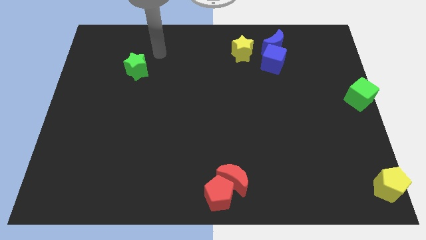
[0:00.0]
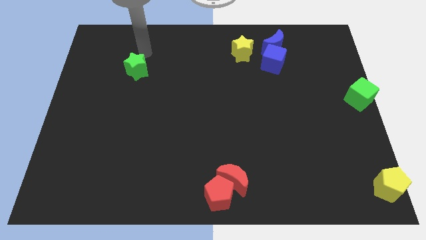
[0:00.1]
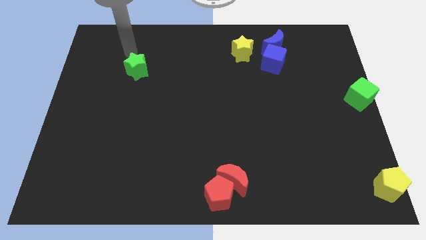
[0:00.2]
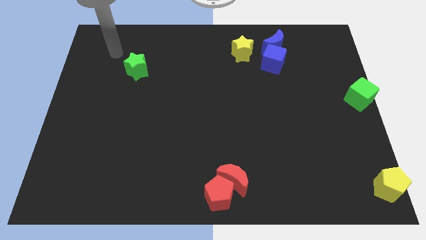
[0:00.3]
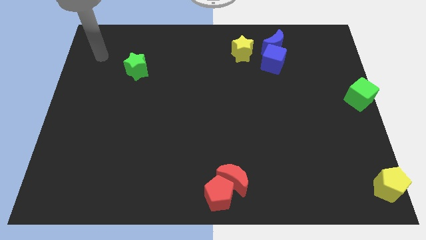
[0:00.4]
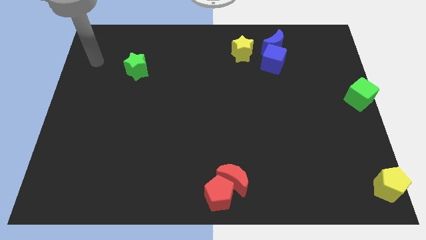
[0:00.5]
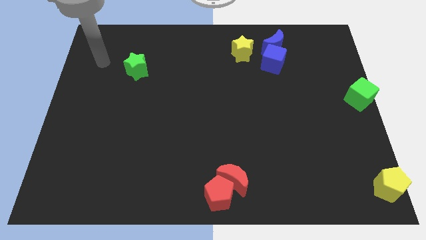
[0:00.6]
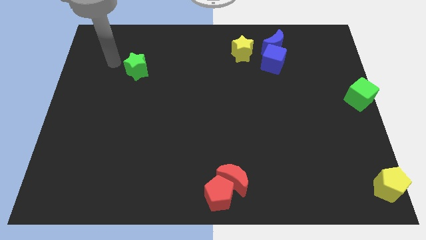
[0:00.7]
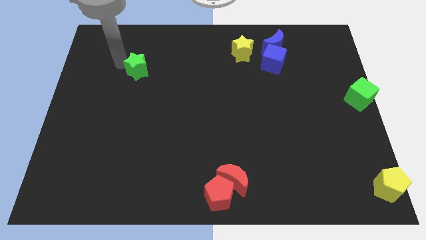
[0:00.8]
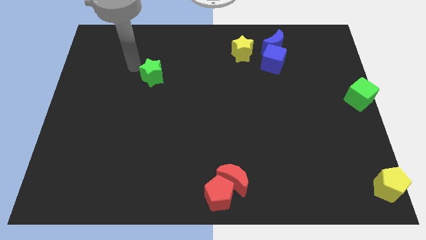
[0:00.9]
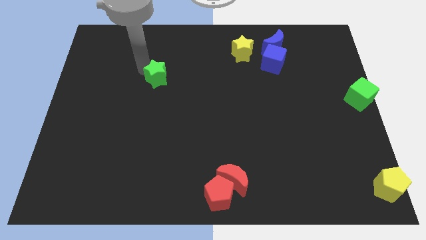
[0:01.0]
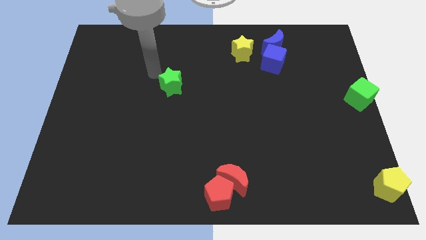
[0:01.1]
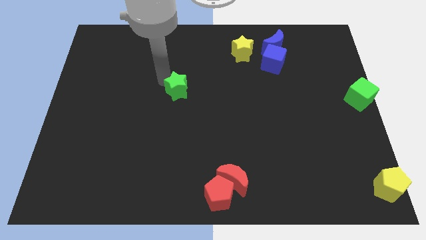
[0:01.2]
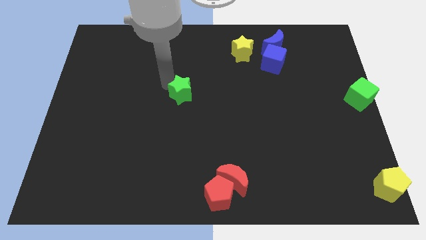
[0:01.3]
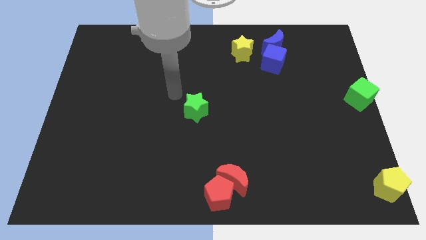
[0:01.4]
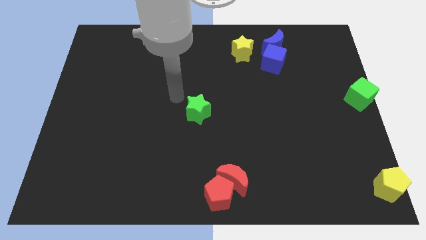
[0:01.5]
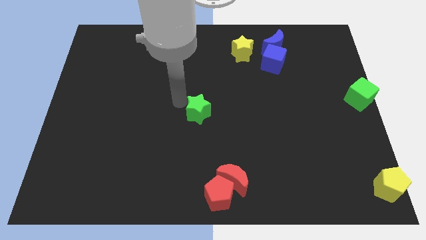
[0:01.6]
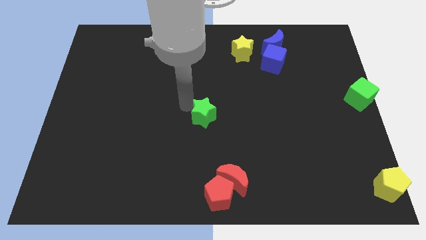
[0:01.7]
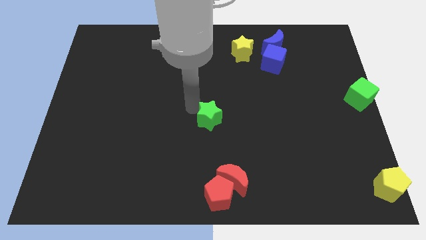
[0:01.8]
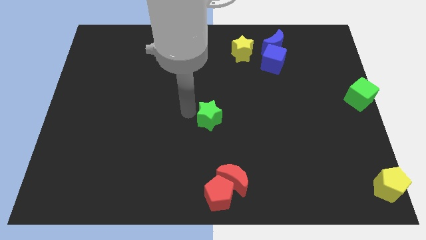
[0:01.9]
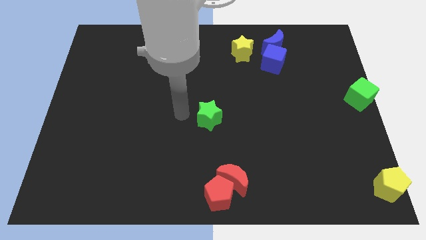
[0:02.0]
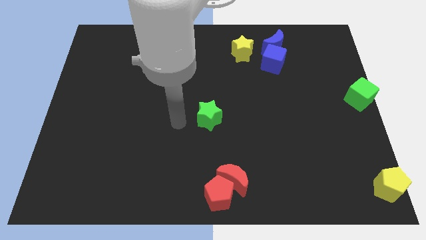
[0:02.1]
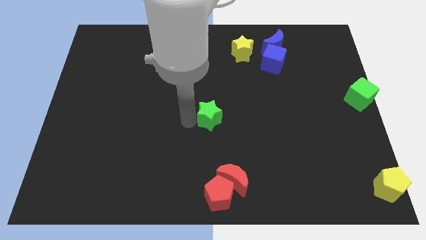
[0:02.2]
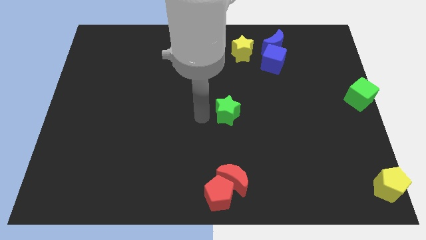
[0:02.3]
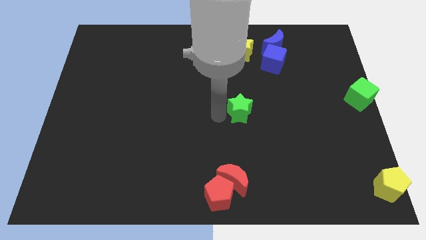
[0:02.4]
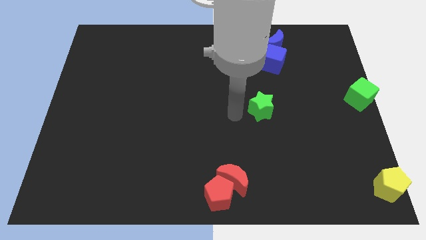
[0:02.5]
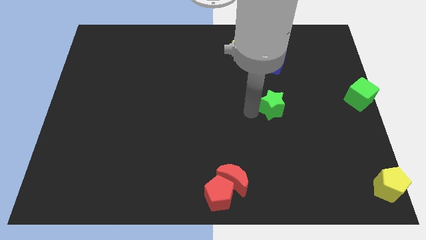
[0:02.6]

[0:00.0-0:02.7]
place the green star down to the blue cube

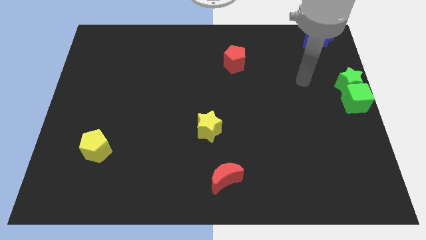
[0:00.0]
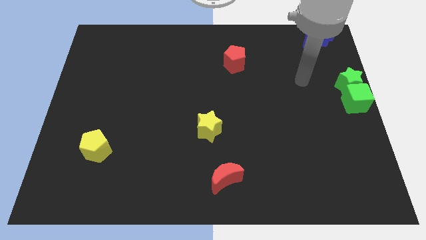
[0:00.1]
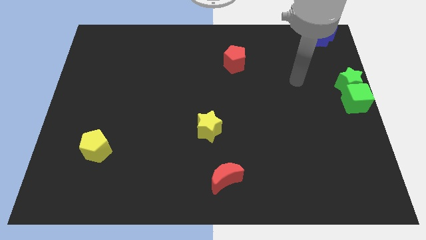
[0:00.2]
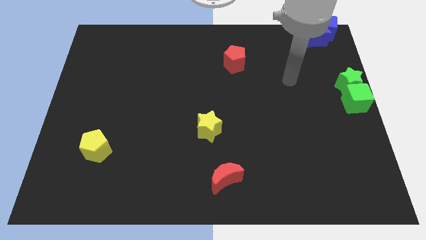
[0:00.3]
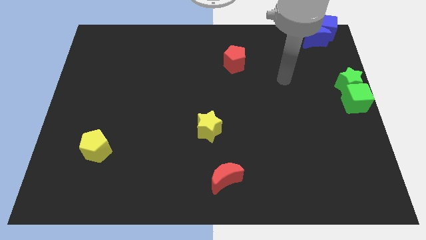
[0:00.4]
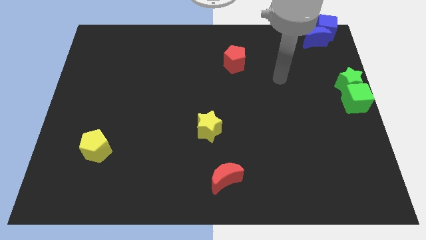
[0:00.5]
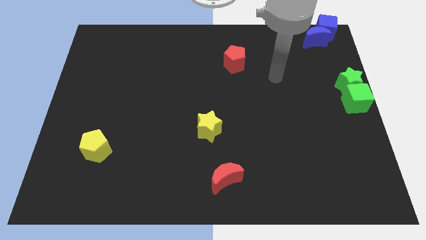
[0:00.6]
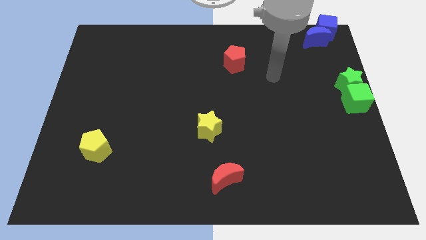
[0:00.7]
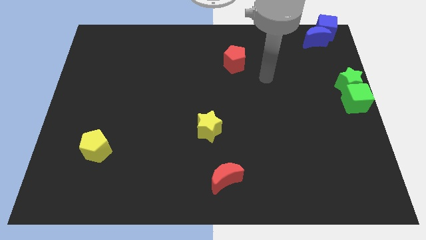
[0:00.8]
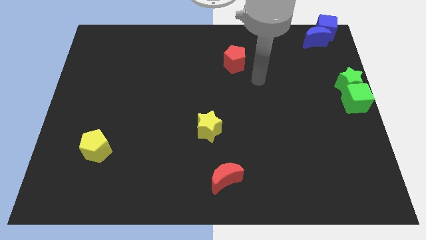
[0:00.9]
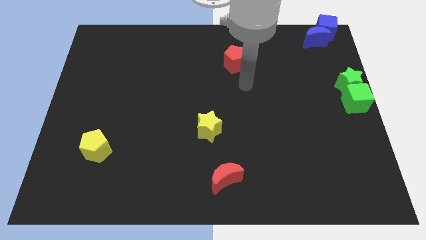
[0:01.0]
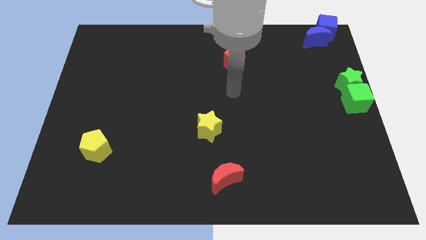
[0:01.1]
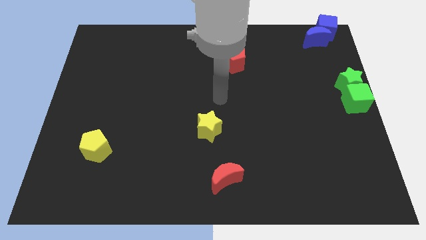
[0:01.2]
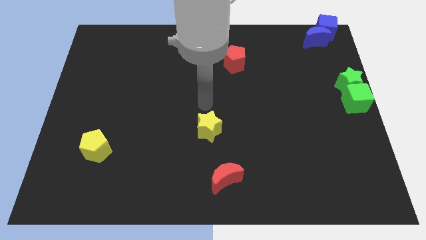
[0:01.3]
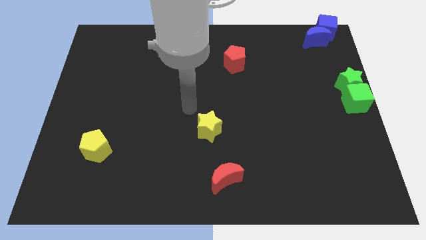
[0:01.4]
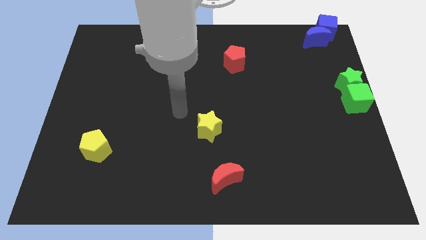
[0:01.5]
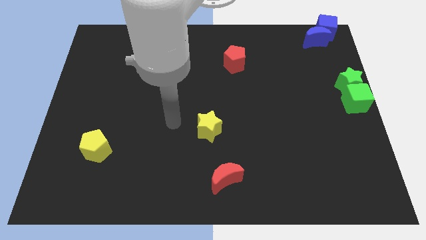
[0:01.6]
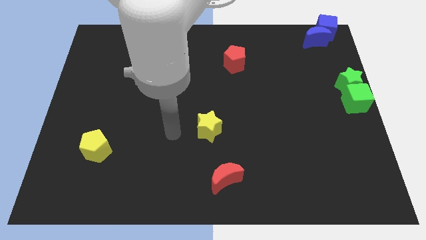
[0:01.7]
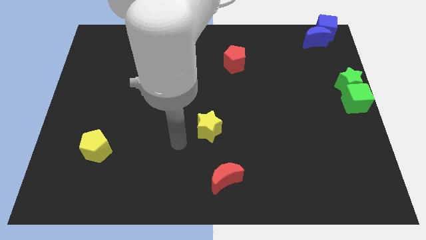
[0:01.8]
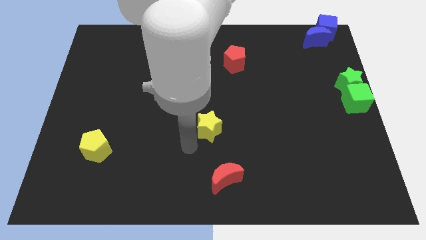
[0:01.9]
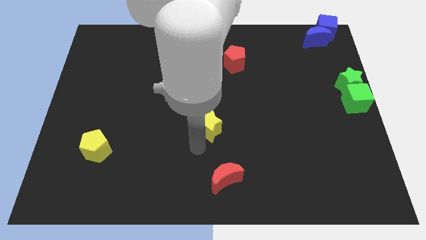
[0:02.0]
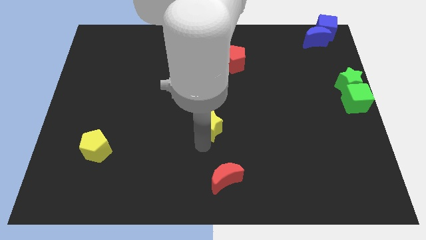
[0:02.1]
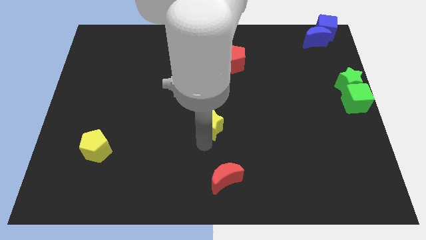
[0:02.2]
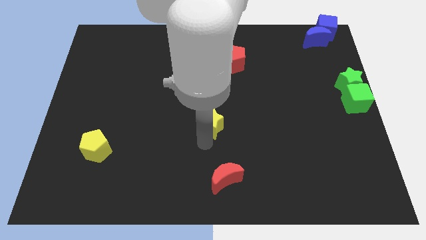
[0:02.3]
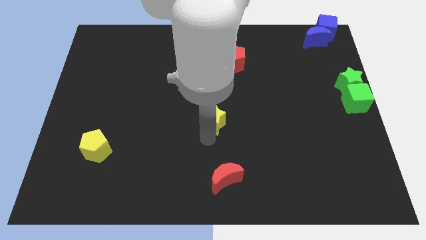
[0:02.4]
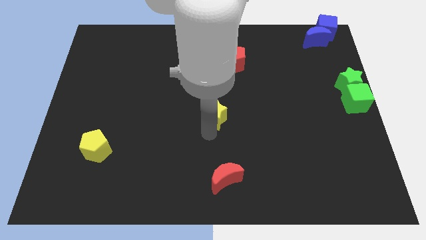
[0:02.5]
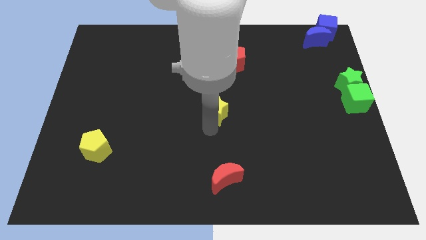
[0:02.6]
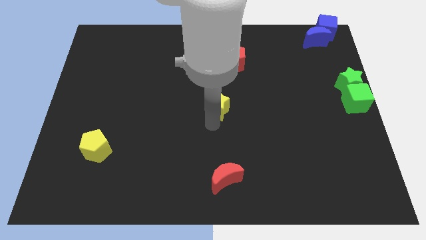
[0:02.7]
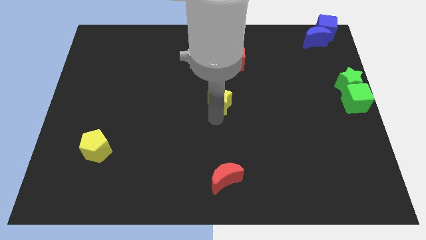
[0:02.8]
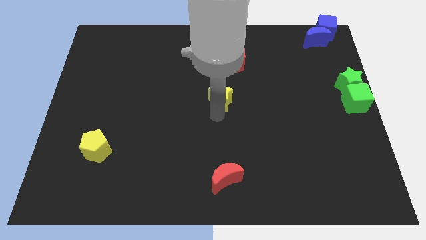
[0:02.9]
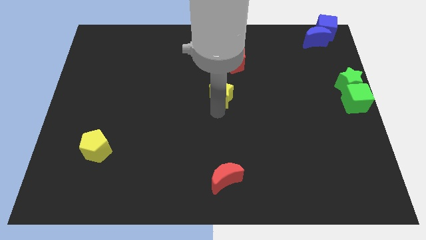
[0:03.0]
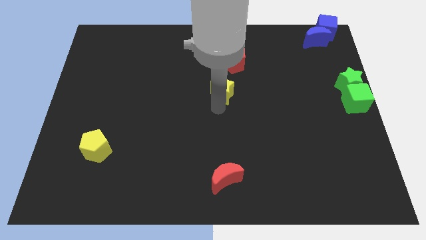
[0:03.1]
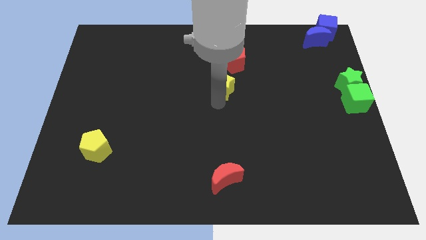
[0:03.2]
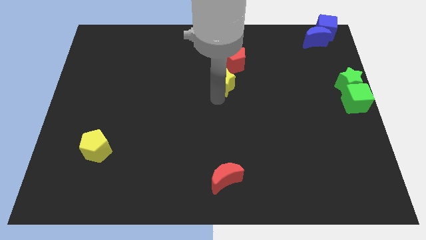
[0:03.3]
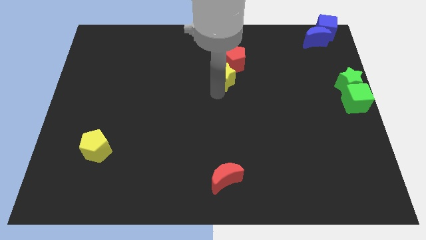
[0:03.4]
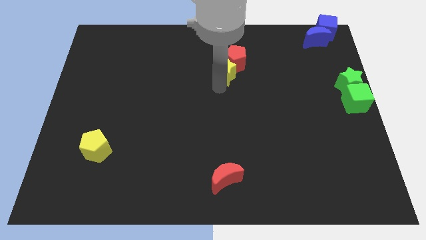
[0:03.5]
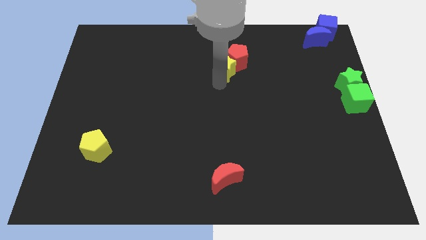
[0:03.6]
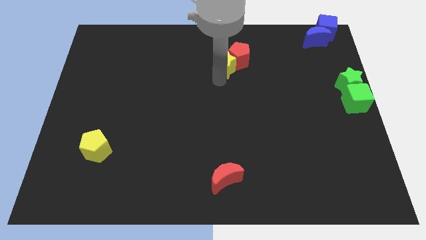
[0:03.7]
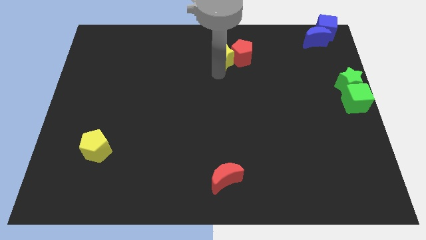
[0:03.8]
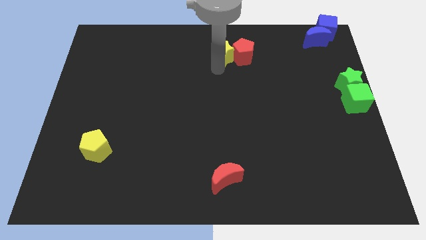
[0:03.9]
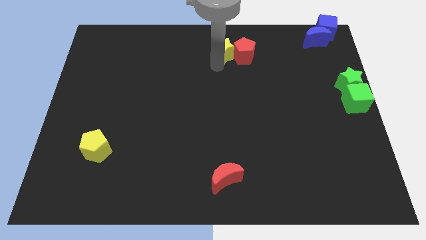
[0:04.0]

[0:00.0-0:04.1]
slide the yellow star into the left side of the red pentagon

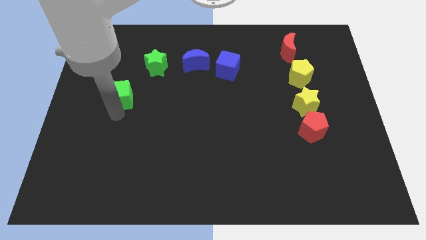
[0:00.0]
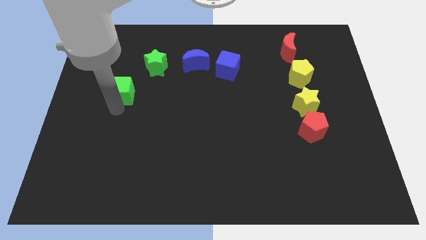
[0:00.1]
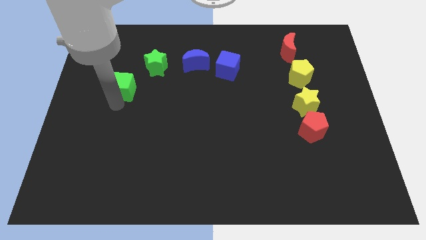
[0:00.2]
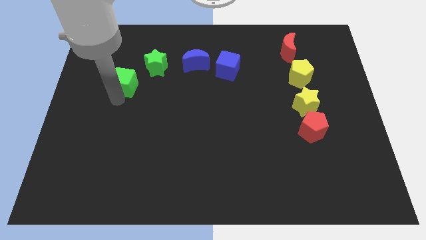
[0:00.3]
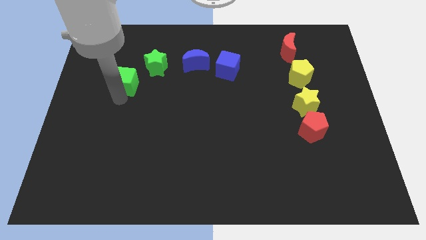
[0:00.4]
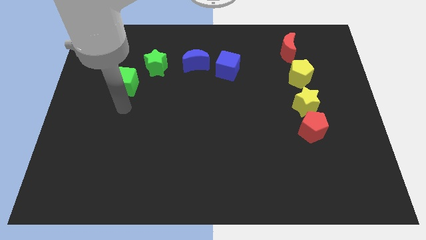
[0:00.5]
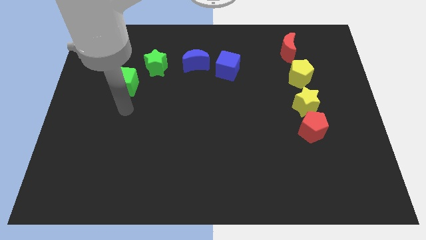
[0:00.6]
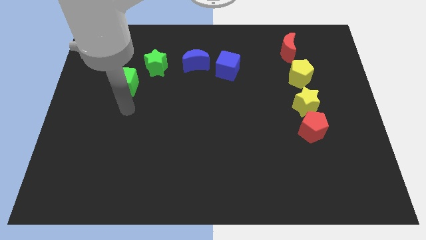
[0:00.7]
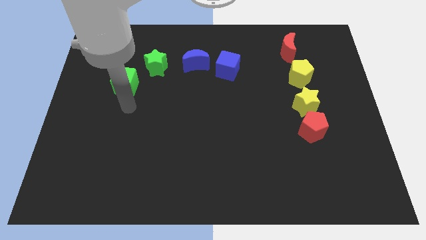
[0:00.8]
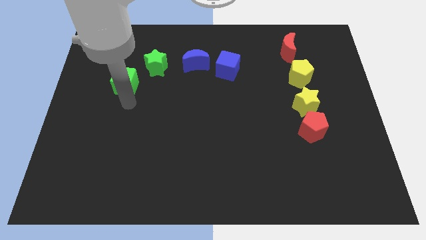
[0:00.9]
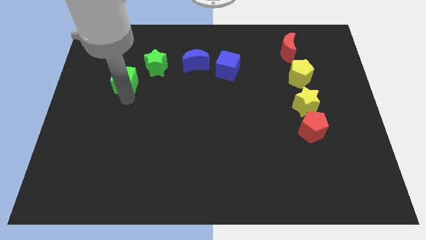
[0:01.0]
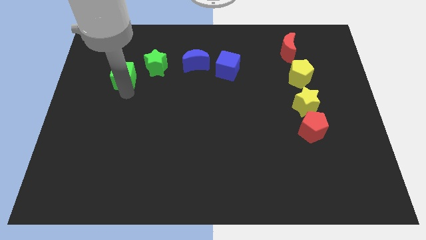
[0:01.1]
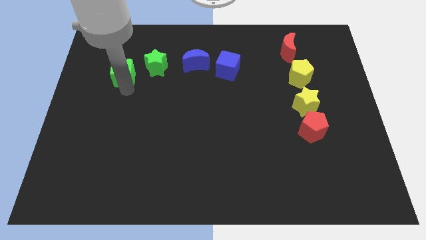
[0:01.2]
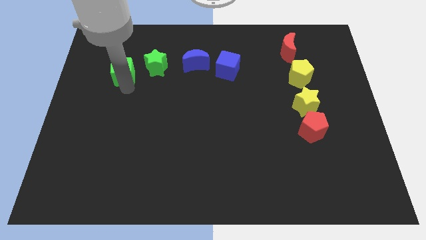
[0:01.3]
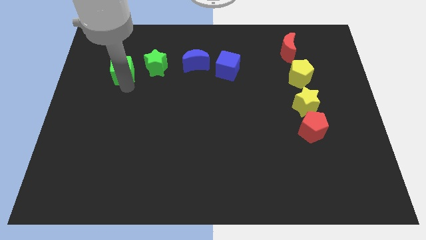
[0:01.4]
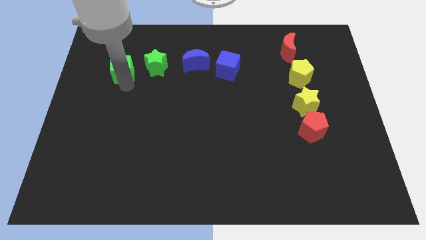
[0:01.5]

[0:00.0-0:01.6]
place the green cube to the left of the green star

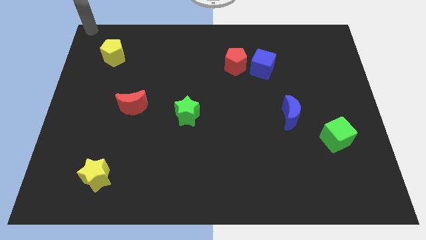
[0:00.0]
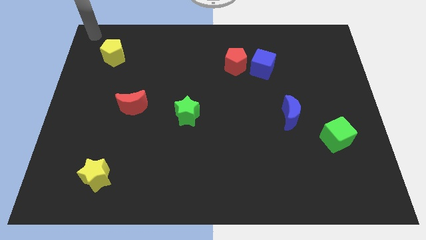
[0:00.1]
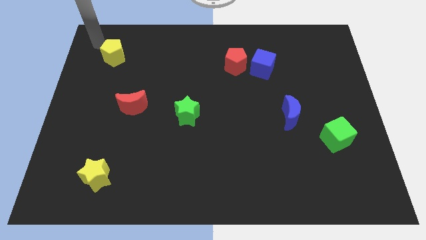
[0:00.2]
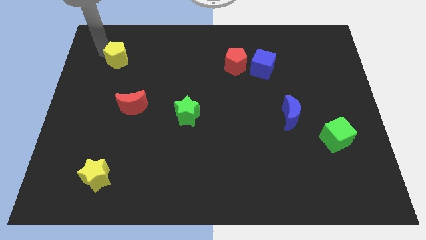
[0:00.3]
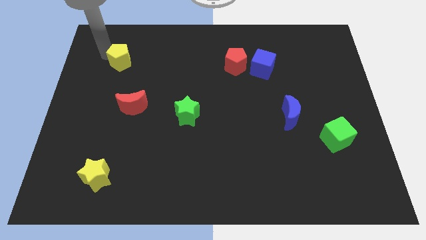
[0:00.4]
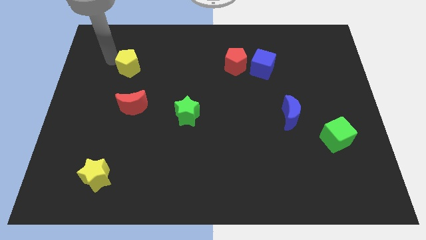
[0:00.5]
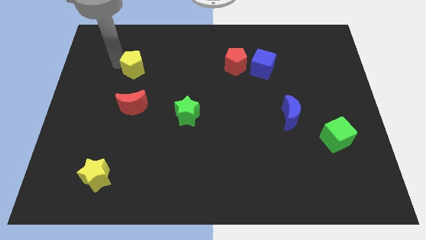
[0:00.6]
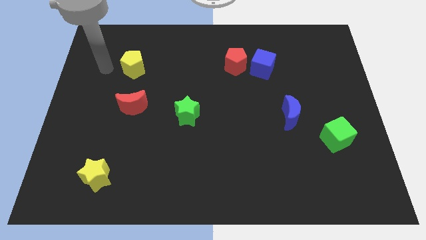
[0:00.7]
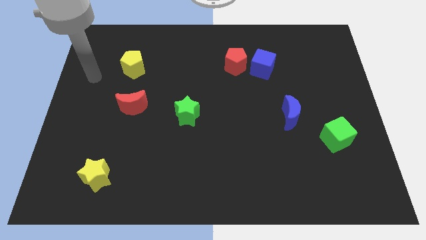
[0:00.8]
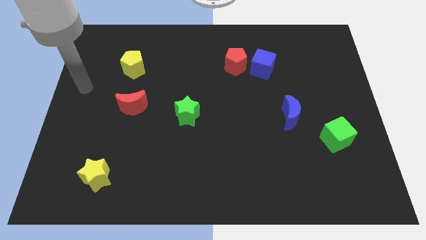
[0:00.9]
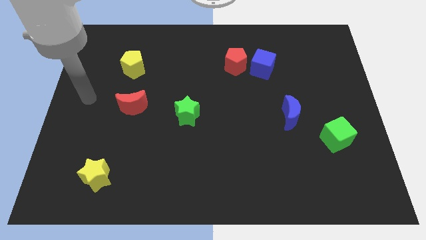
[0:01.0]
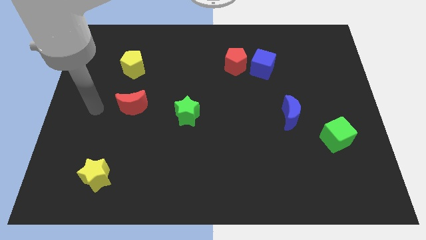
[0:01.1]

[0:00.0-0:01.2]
slightly push the yellow pentagon above the red moon
